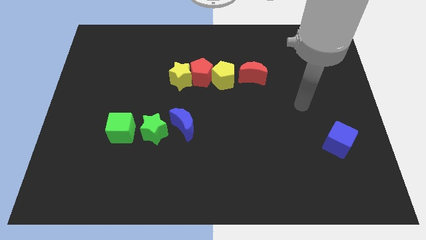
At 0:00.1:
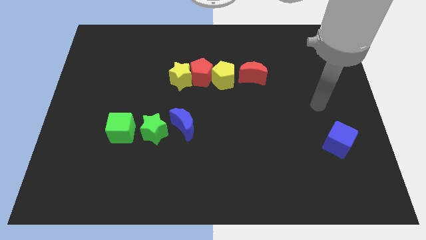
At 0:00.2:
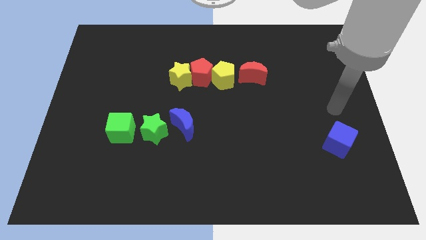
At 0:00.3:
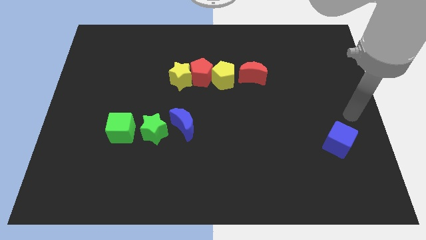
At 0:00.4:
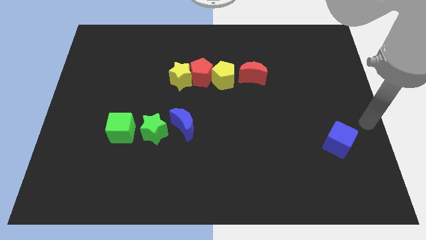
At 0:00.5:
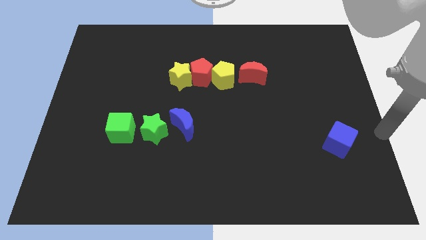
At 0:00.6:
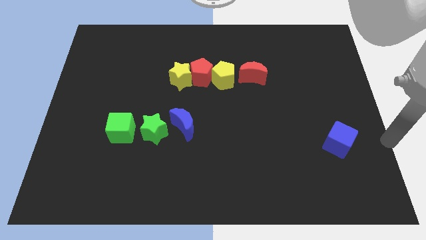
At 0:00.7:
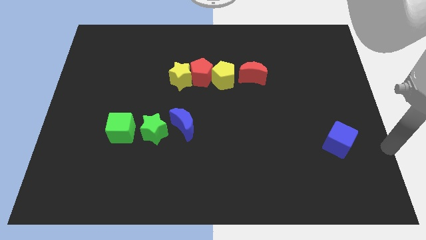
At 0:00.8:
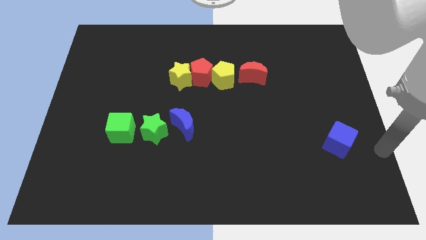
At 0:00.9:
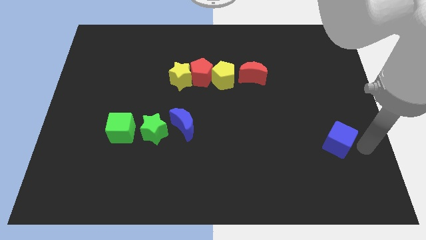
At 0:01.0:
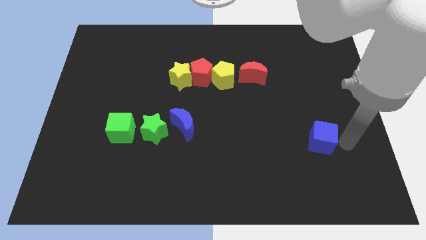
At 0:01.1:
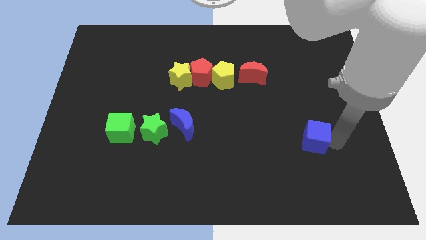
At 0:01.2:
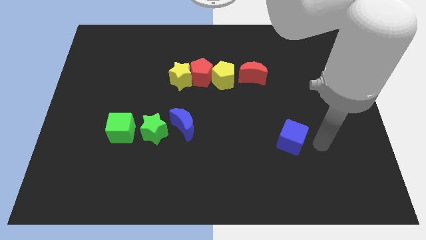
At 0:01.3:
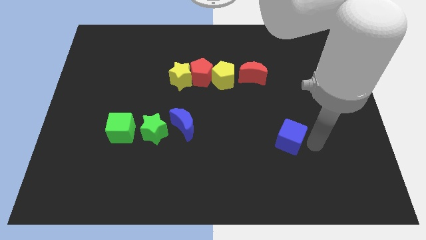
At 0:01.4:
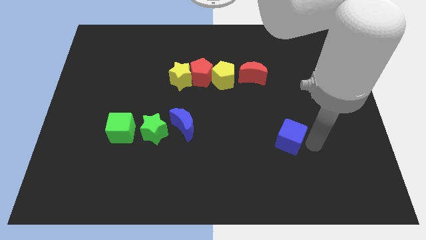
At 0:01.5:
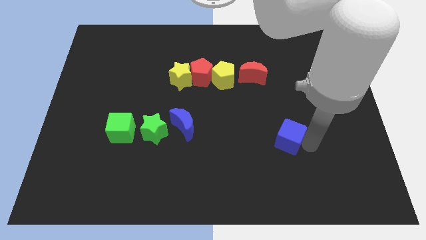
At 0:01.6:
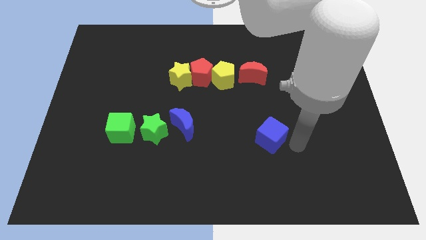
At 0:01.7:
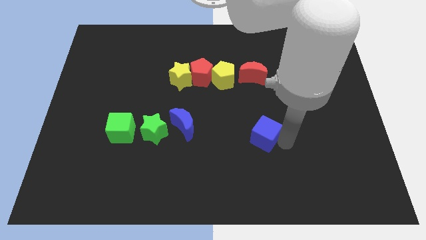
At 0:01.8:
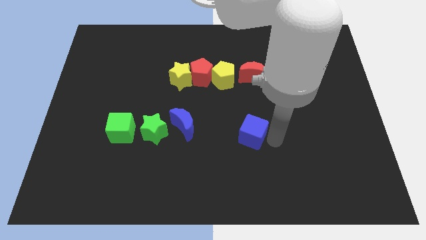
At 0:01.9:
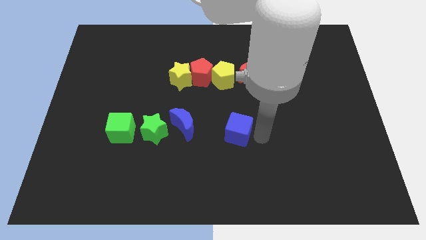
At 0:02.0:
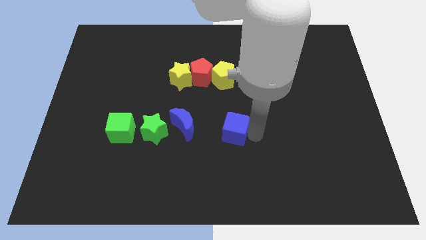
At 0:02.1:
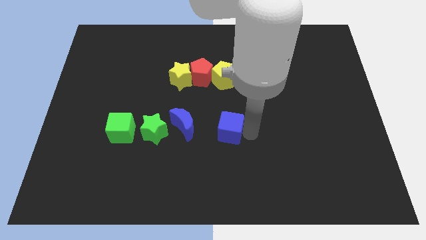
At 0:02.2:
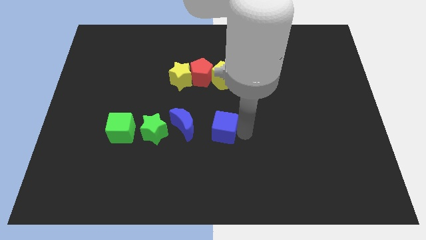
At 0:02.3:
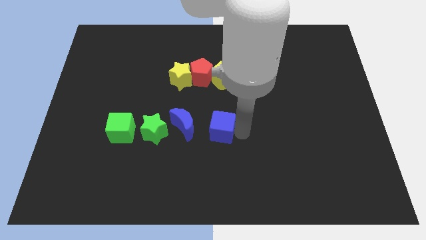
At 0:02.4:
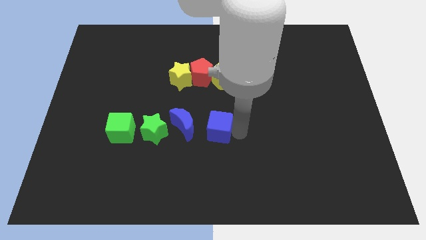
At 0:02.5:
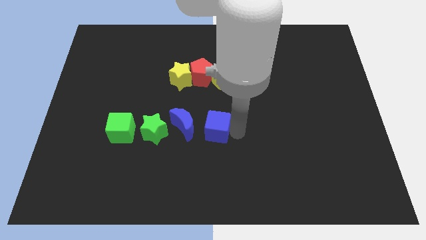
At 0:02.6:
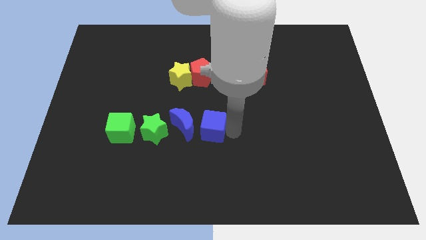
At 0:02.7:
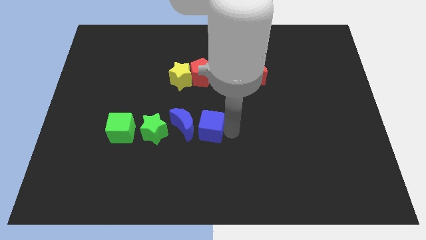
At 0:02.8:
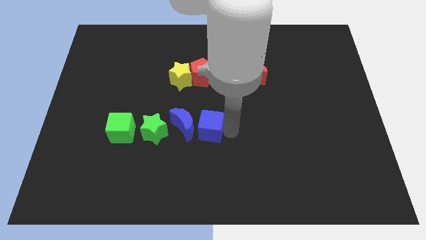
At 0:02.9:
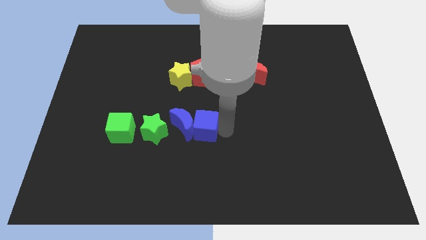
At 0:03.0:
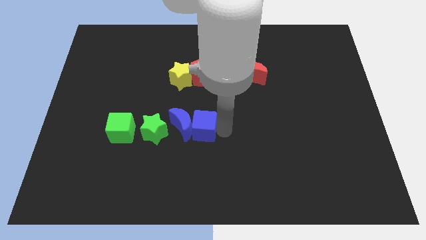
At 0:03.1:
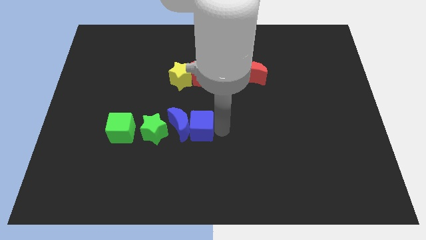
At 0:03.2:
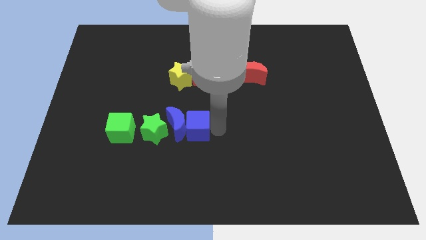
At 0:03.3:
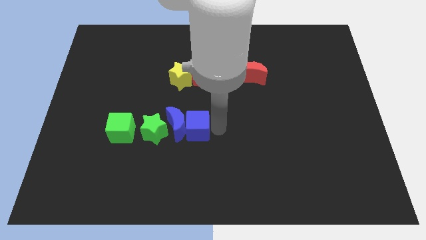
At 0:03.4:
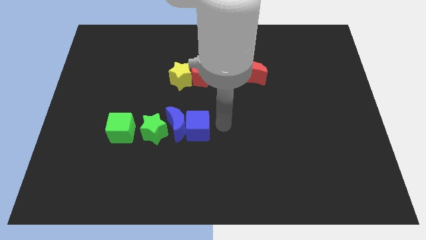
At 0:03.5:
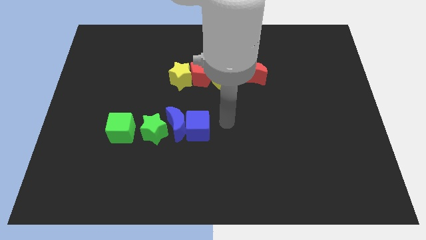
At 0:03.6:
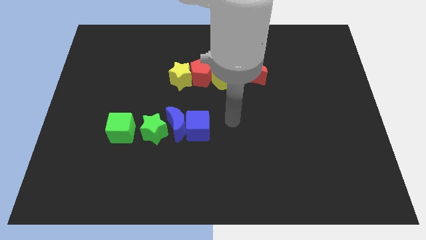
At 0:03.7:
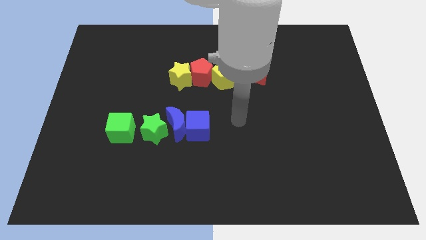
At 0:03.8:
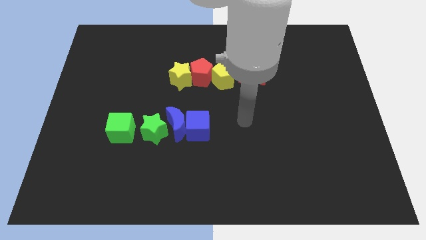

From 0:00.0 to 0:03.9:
push the blue crescent slightly left side with the help of blue cube

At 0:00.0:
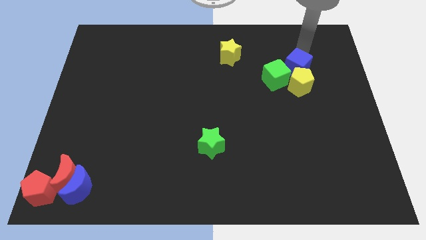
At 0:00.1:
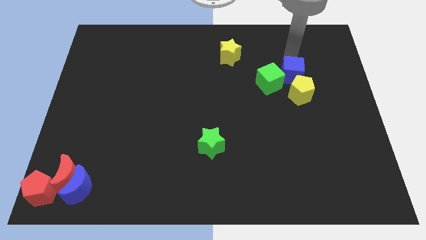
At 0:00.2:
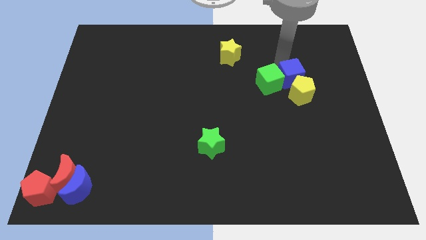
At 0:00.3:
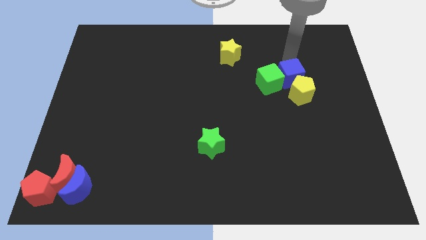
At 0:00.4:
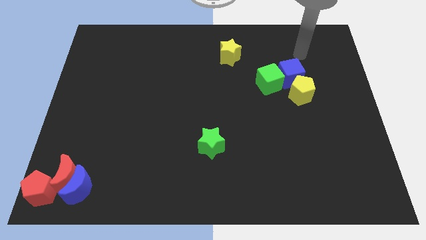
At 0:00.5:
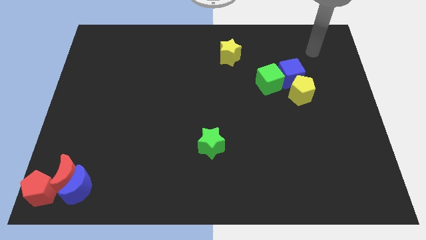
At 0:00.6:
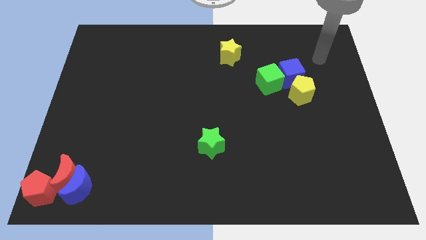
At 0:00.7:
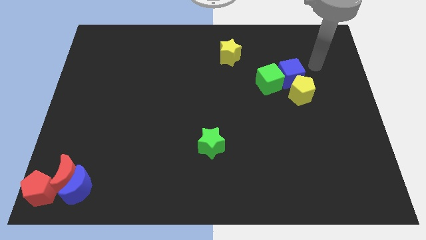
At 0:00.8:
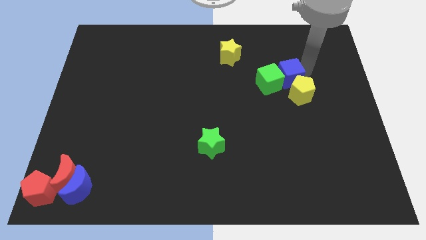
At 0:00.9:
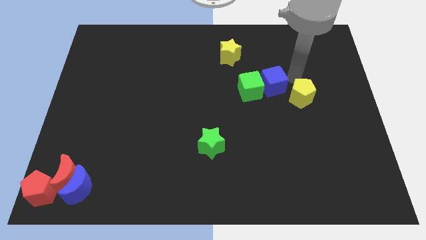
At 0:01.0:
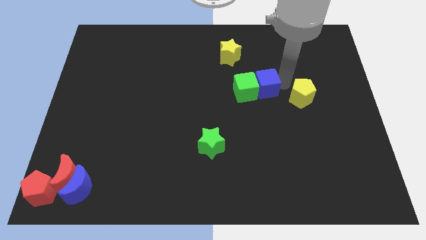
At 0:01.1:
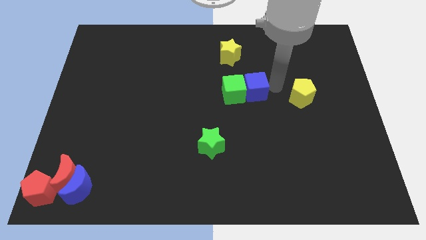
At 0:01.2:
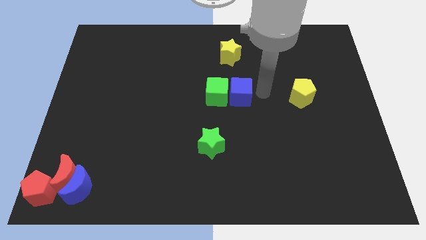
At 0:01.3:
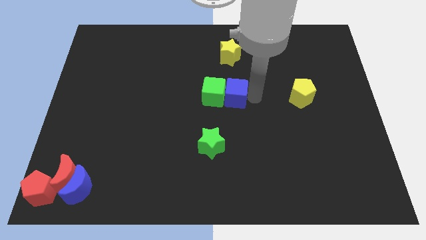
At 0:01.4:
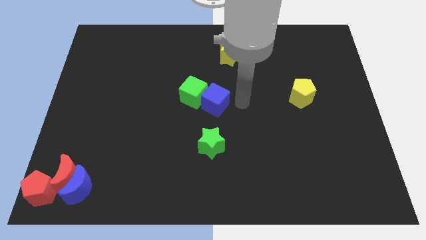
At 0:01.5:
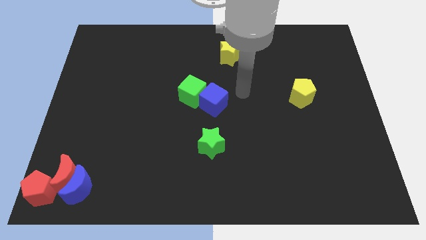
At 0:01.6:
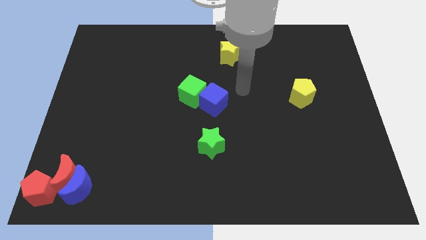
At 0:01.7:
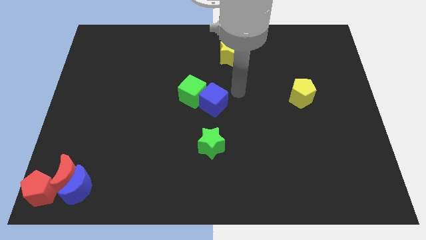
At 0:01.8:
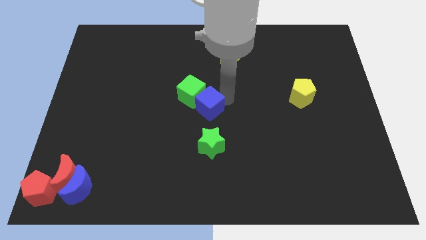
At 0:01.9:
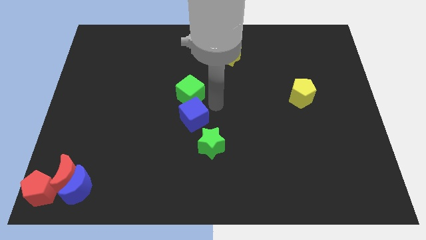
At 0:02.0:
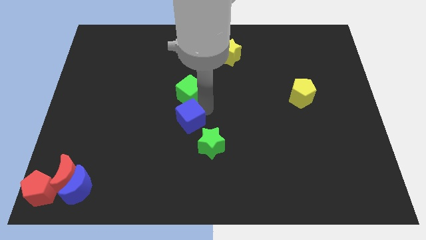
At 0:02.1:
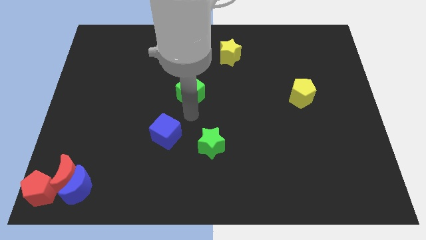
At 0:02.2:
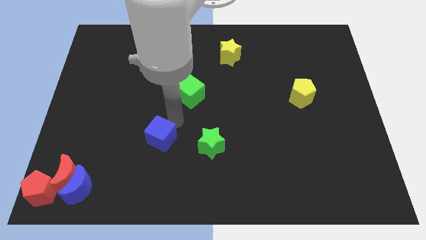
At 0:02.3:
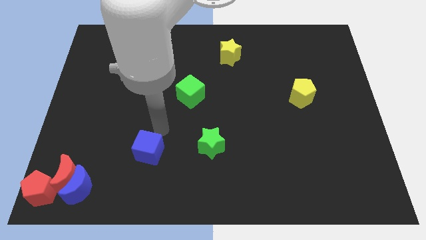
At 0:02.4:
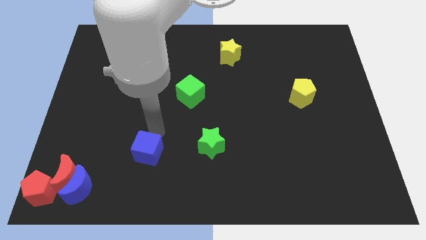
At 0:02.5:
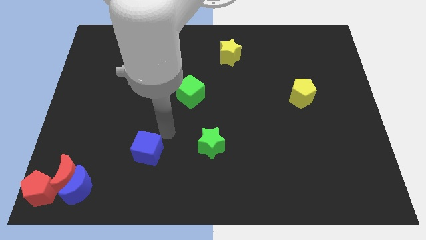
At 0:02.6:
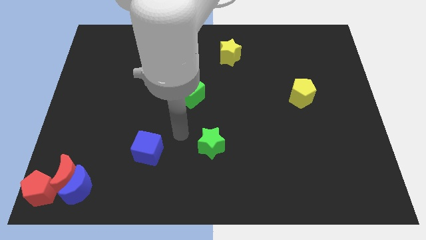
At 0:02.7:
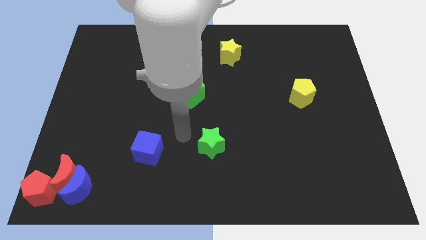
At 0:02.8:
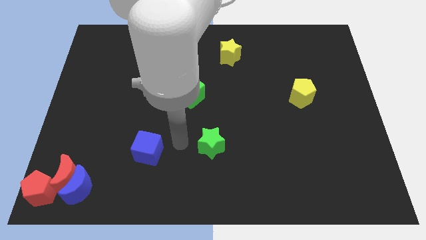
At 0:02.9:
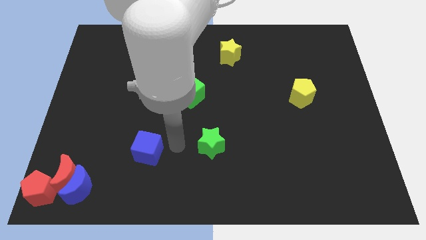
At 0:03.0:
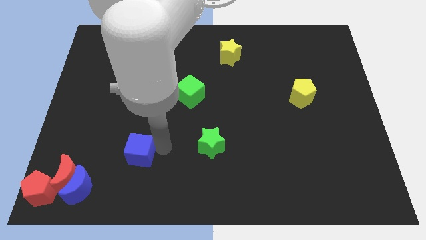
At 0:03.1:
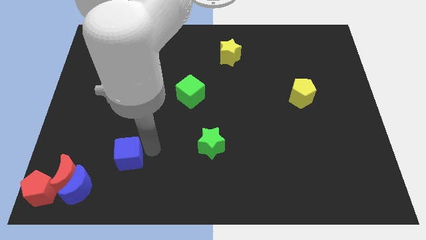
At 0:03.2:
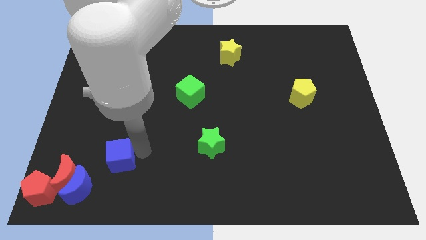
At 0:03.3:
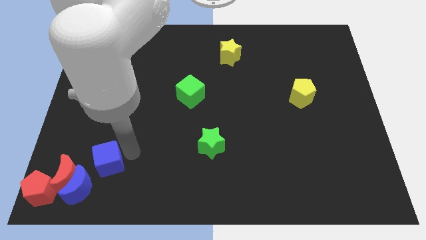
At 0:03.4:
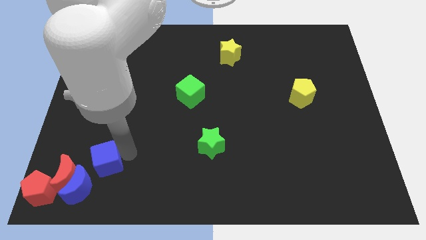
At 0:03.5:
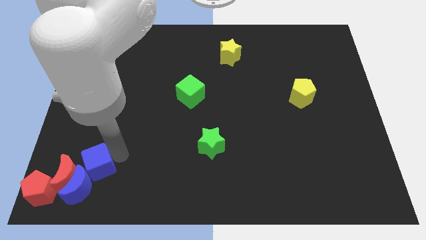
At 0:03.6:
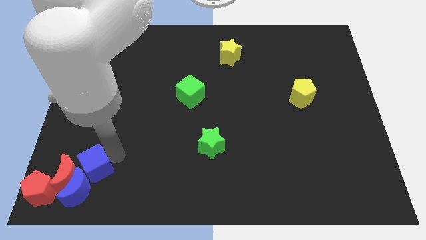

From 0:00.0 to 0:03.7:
move the blue cube to the top right side of the blue crescent

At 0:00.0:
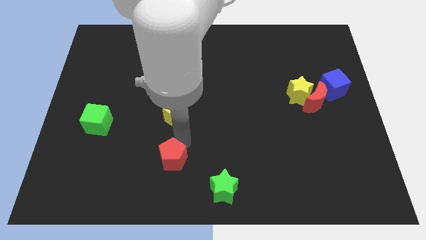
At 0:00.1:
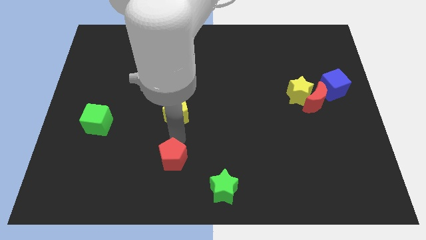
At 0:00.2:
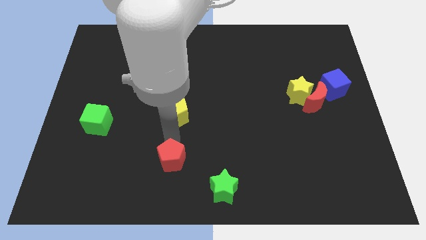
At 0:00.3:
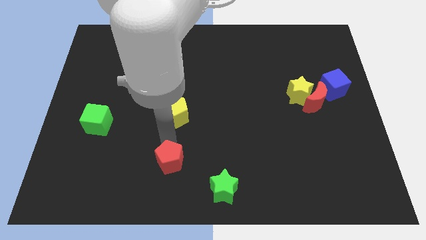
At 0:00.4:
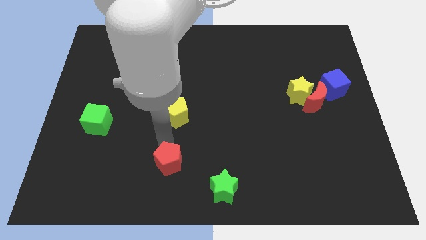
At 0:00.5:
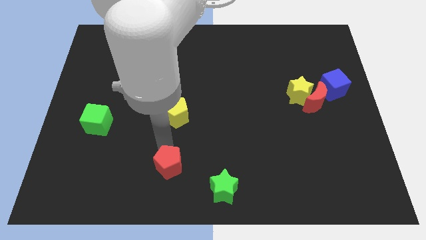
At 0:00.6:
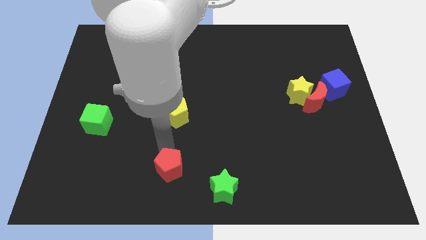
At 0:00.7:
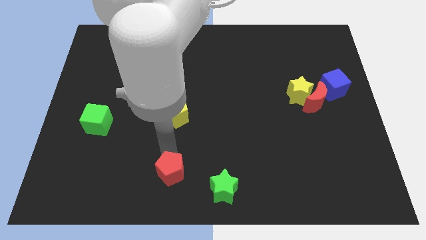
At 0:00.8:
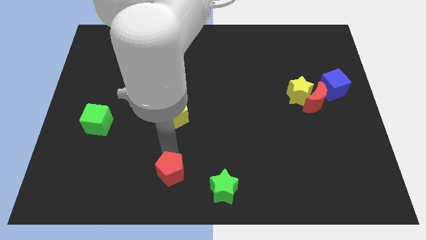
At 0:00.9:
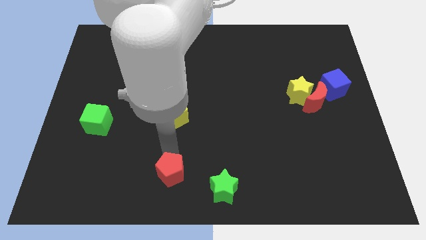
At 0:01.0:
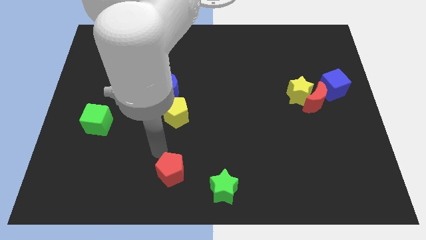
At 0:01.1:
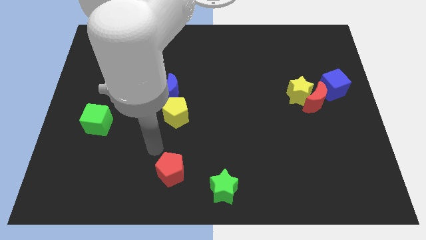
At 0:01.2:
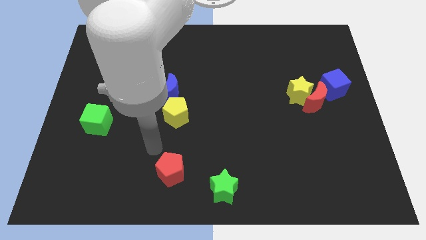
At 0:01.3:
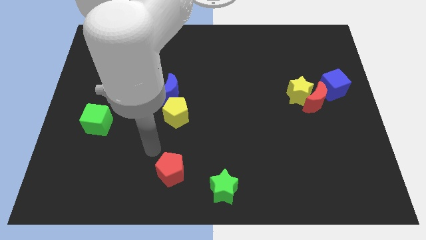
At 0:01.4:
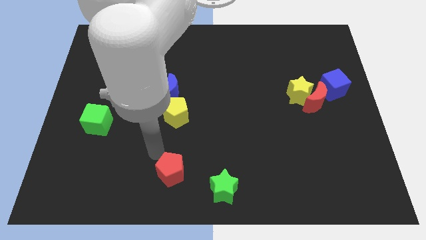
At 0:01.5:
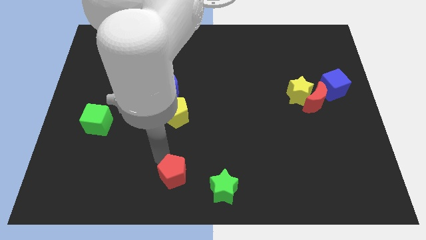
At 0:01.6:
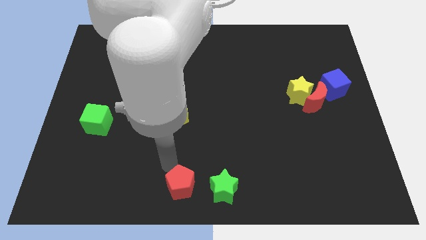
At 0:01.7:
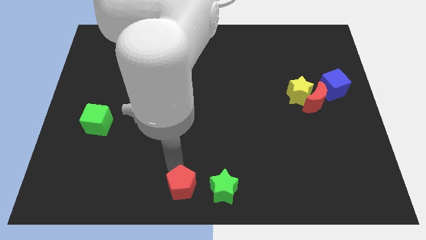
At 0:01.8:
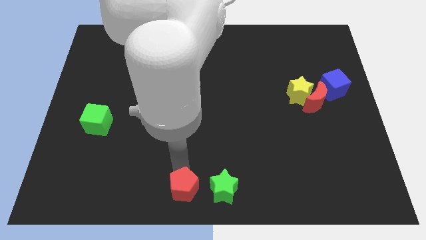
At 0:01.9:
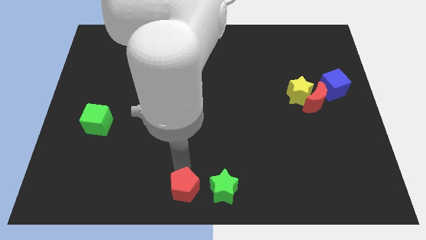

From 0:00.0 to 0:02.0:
move the red pentagon left to the green star
